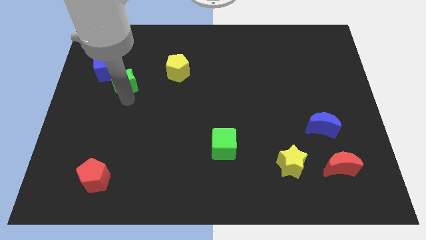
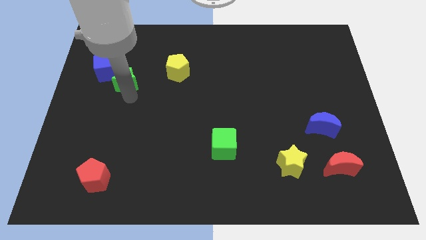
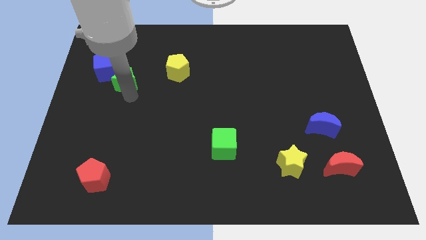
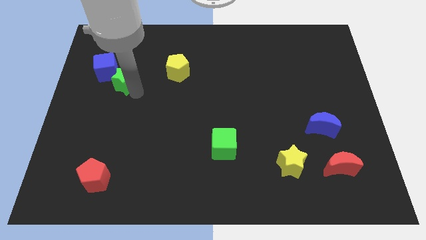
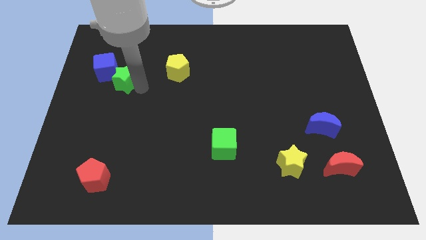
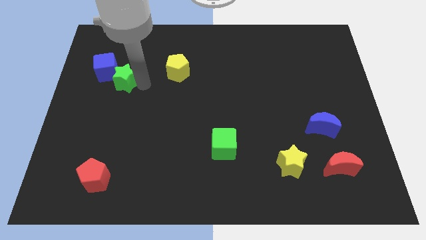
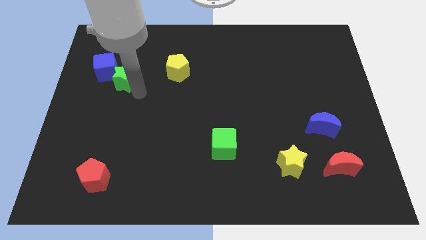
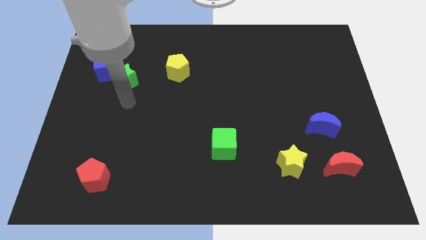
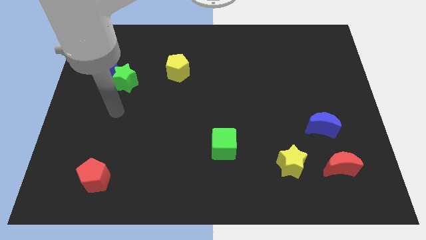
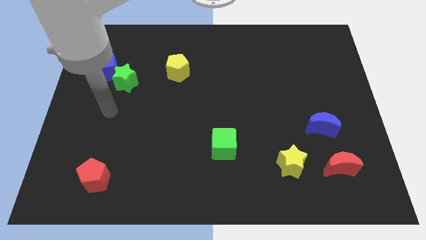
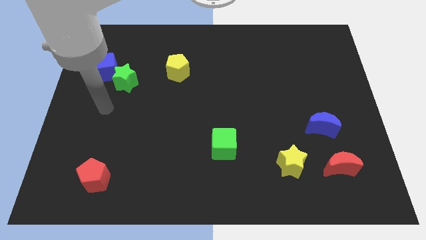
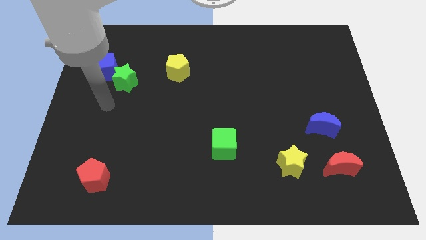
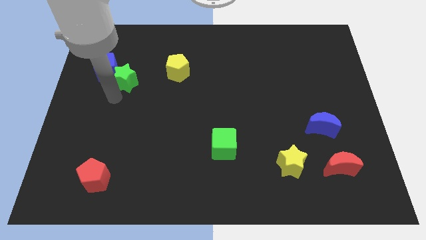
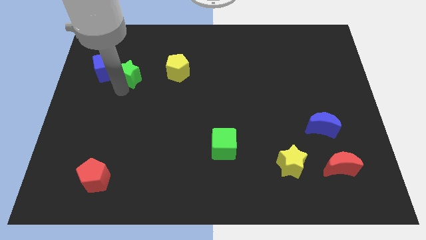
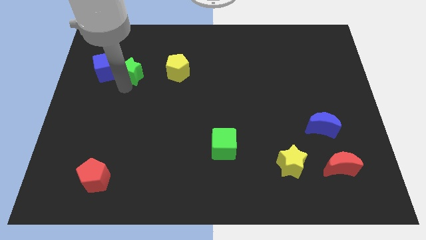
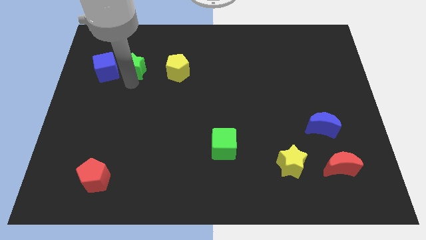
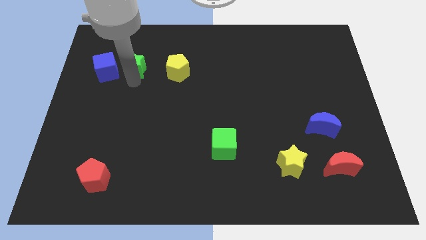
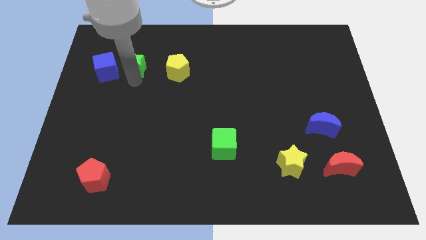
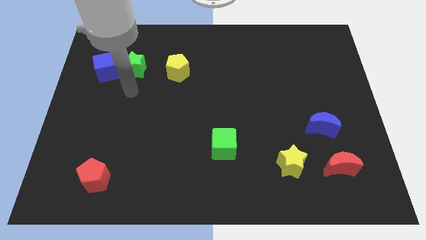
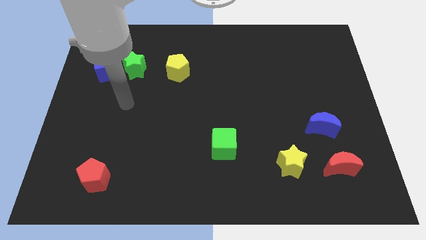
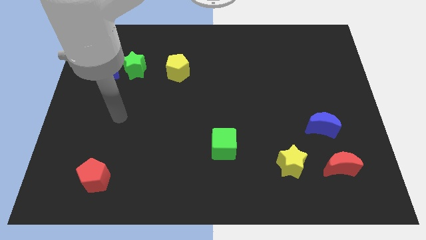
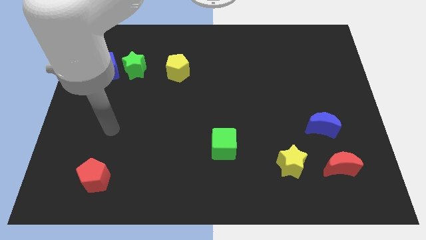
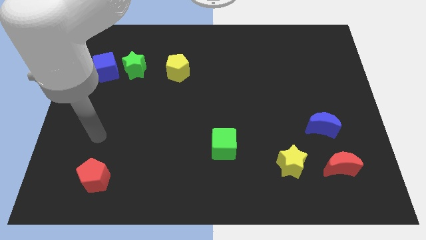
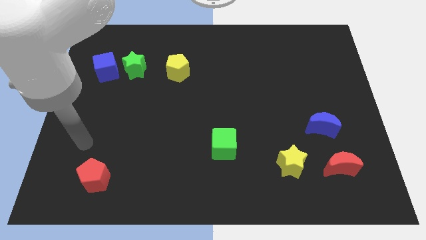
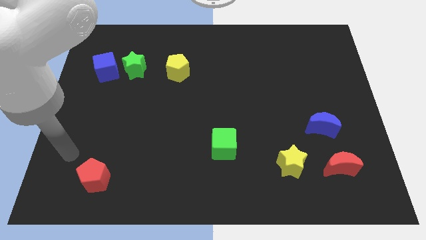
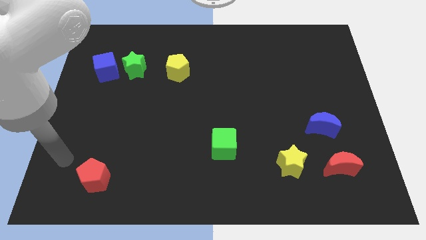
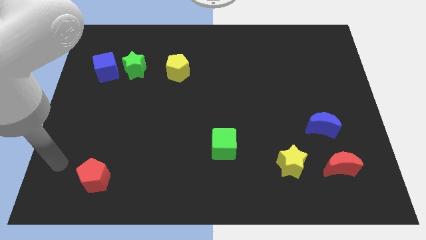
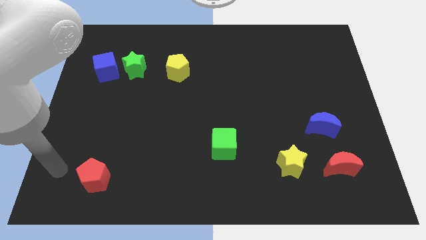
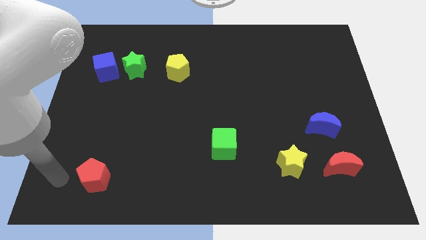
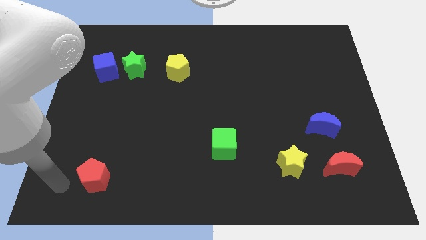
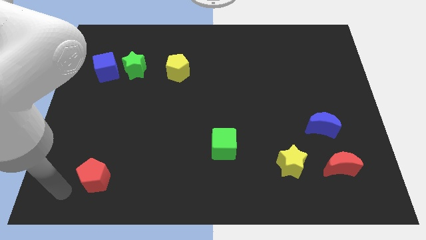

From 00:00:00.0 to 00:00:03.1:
move your arm to the bottom left side of the board

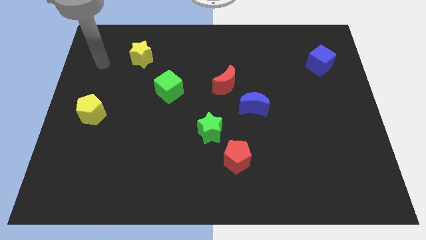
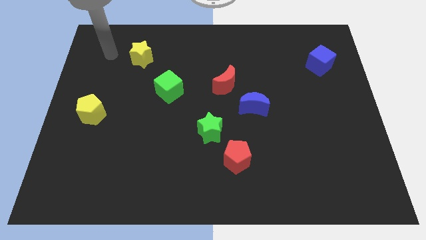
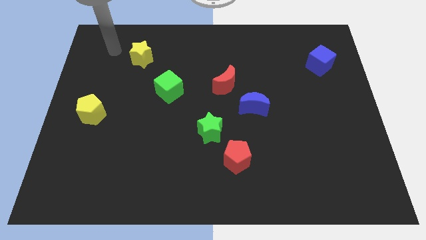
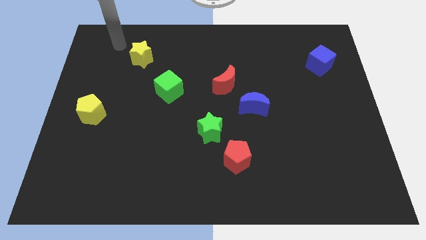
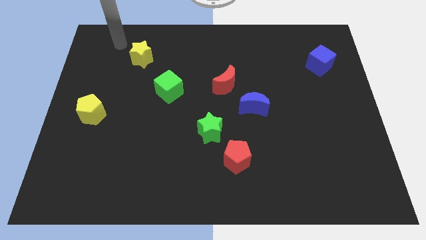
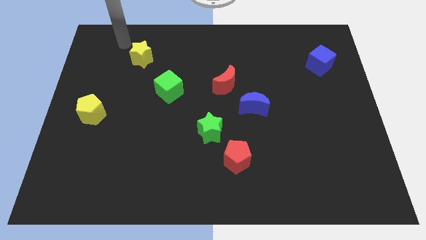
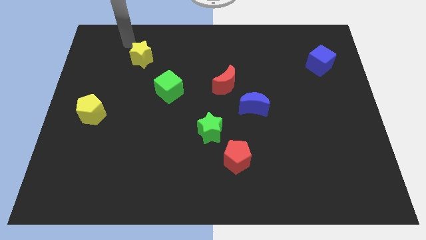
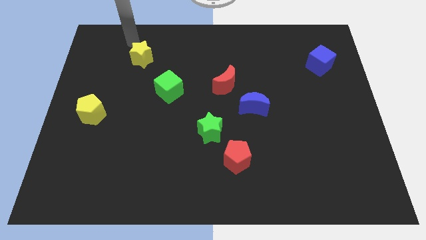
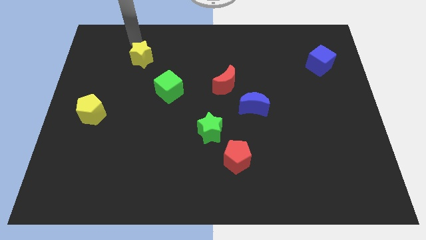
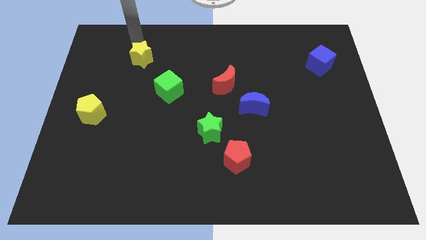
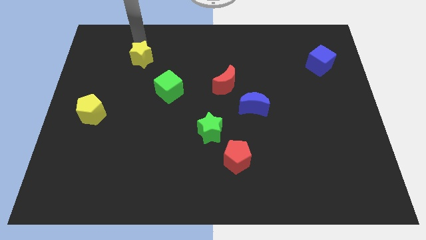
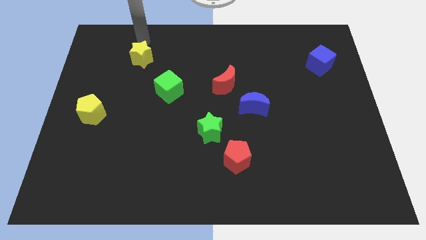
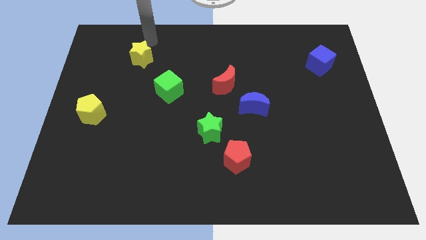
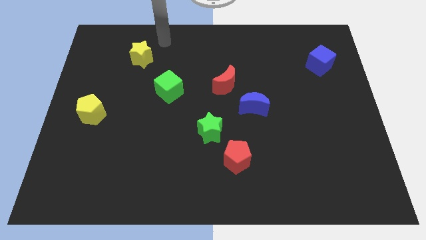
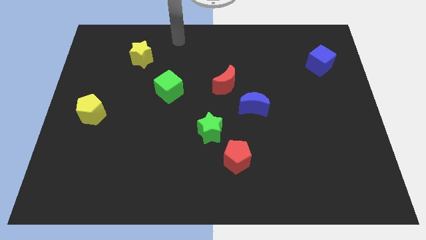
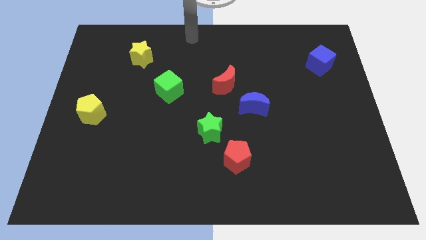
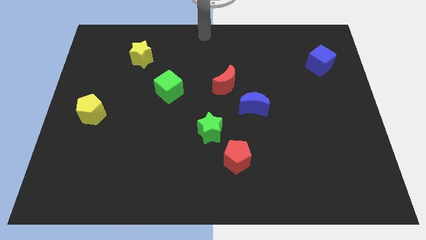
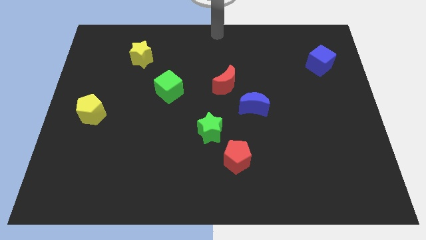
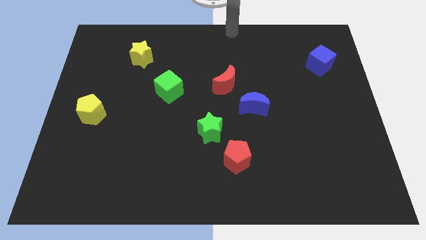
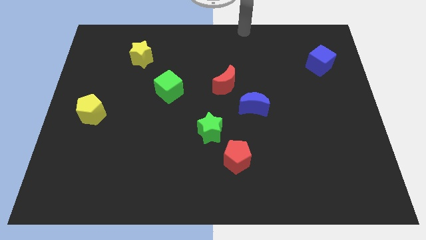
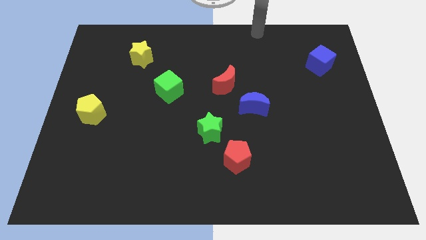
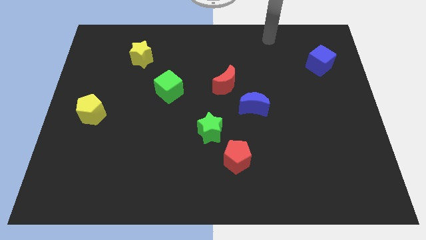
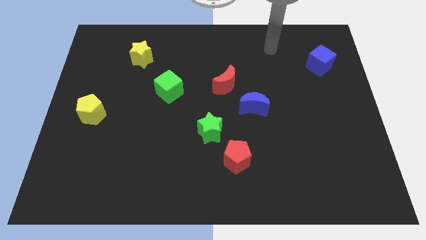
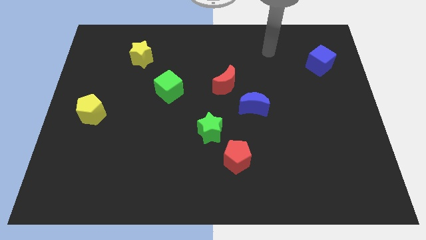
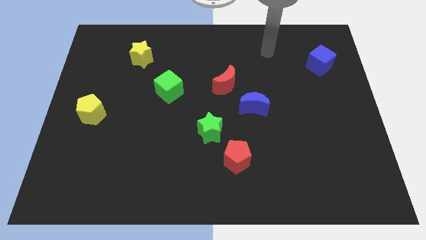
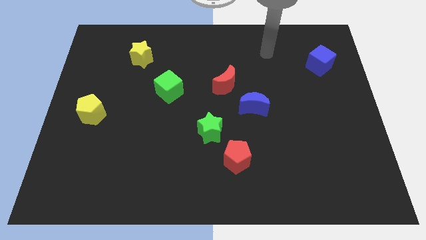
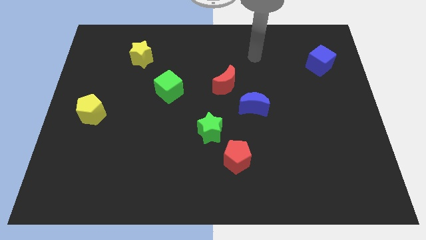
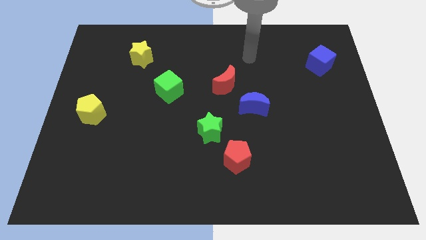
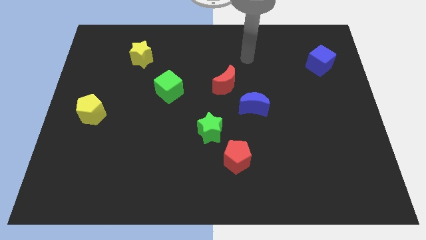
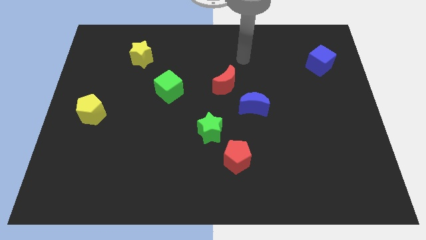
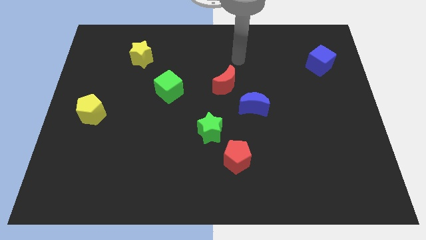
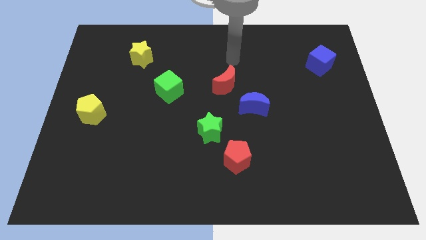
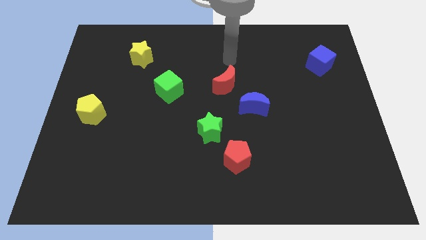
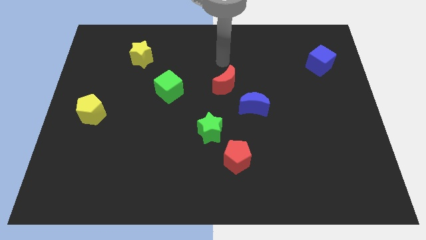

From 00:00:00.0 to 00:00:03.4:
point the arm above the red crescent

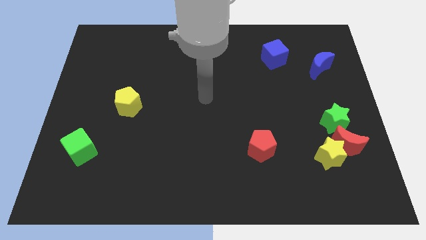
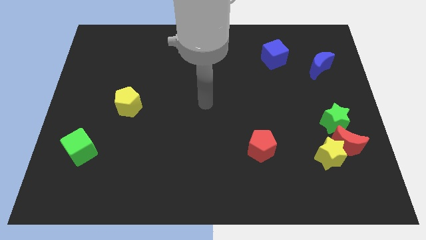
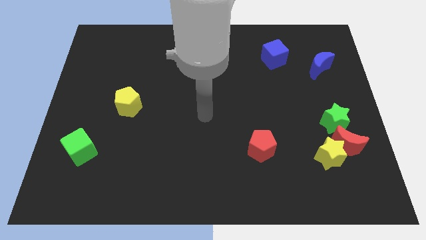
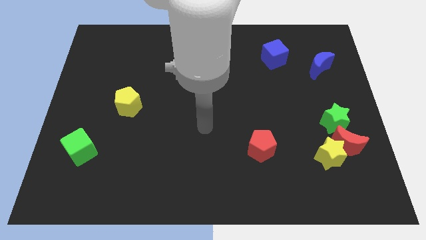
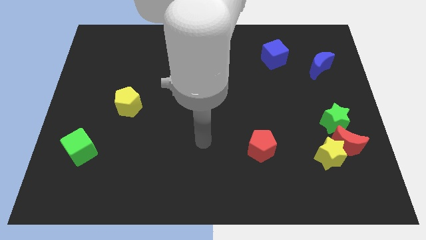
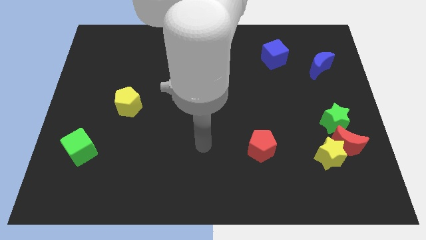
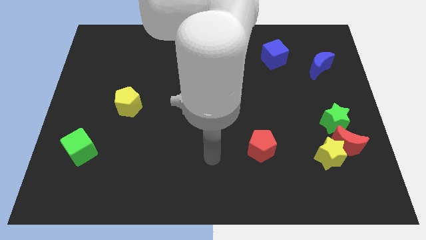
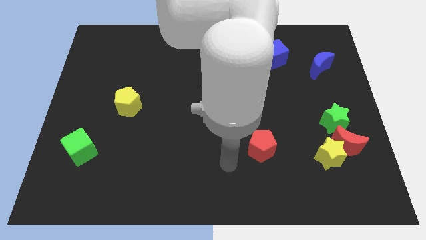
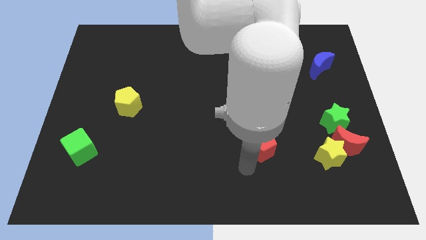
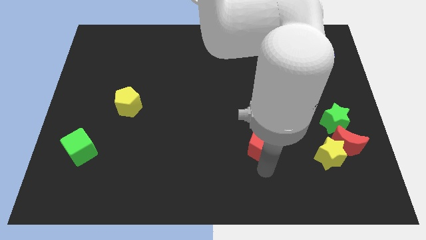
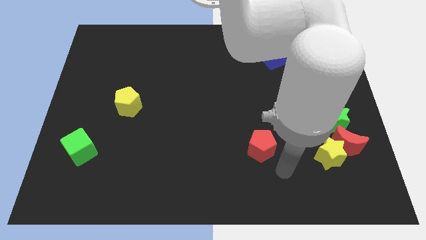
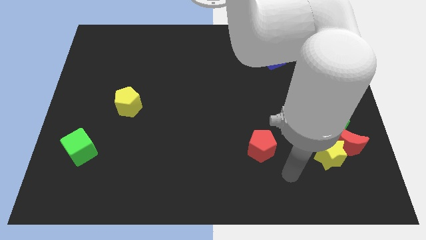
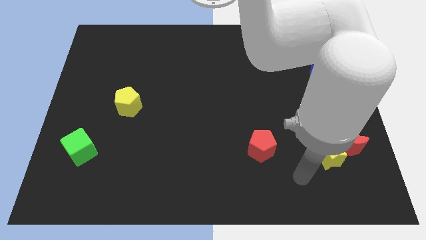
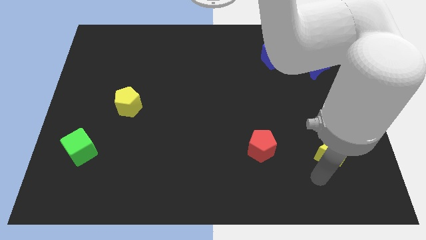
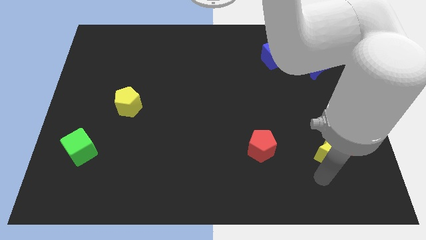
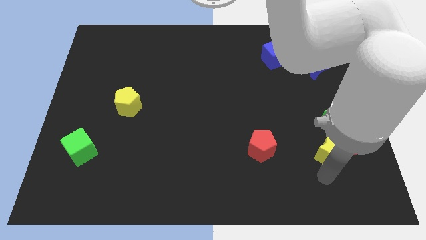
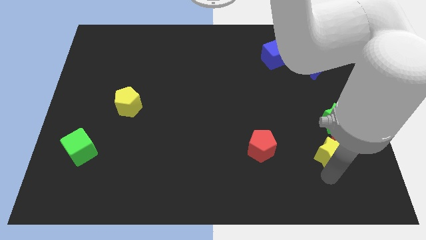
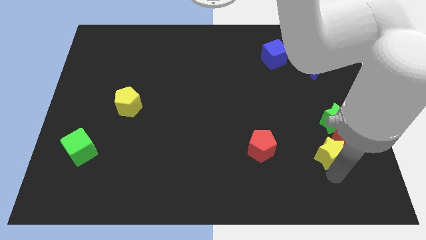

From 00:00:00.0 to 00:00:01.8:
place the arm below the yellow star

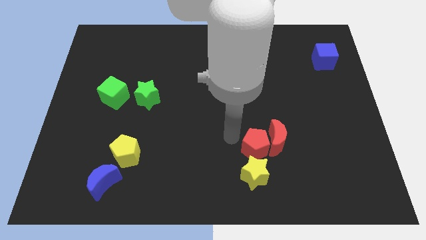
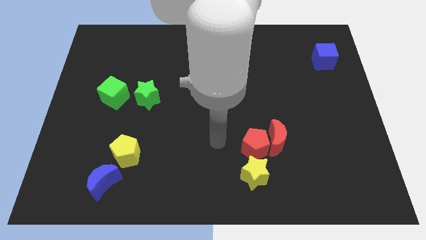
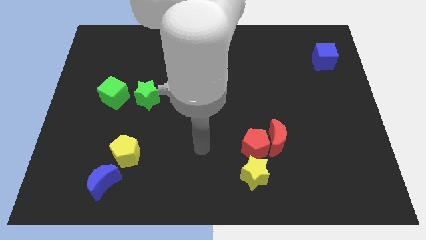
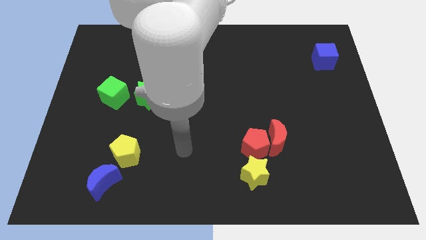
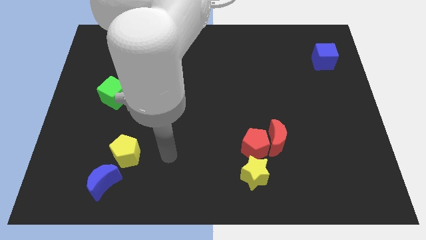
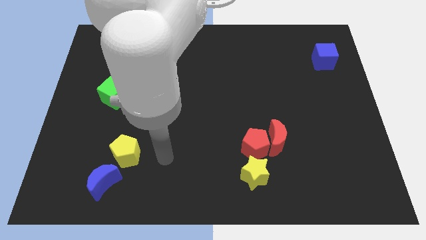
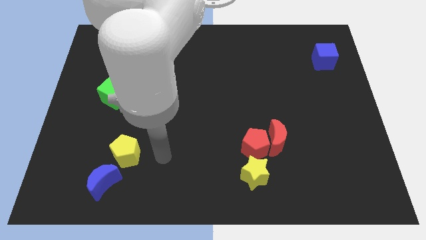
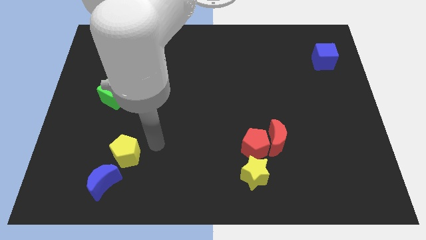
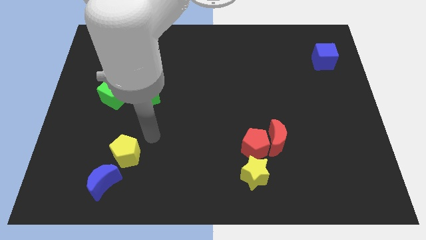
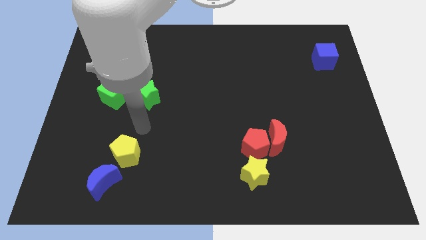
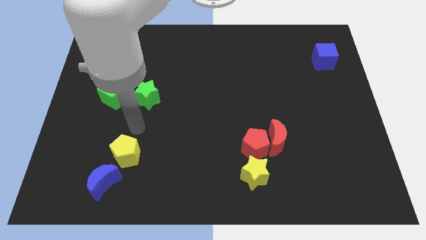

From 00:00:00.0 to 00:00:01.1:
place your arm in between the green star and yellow pentagon
